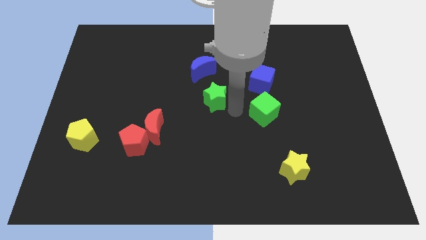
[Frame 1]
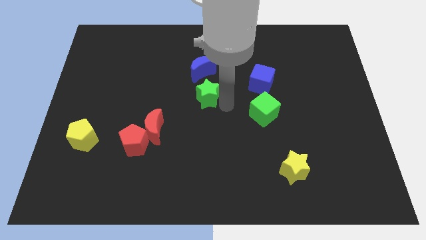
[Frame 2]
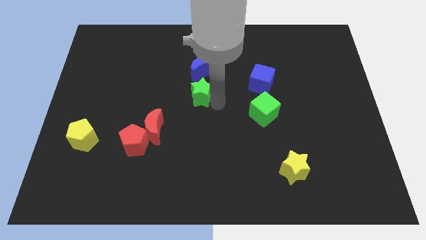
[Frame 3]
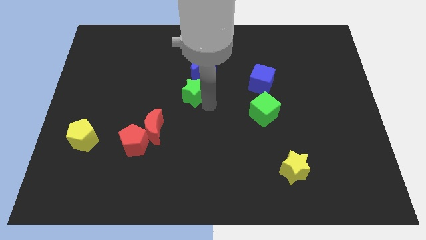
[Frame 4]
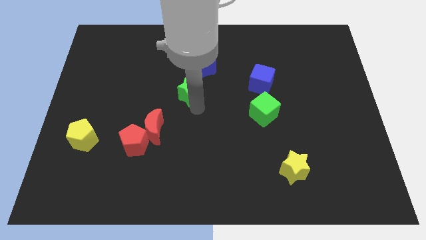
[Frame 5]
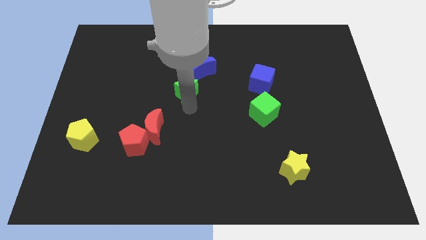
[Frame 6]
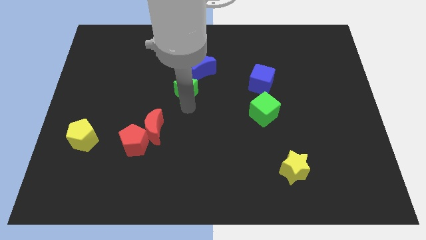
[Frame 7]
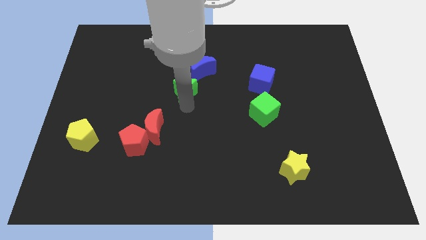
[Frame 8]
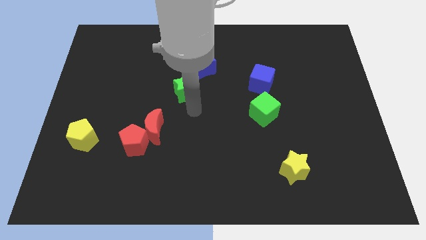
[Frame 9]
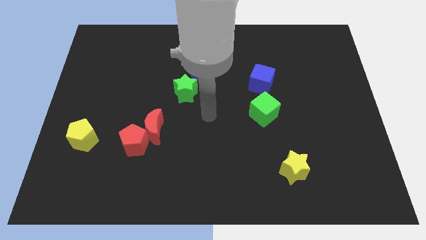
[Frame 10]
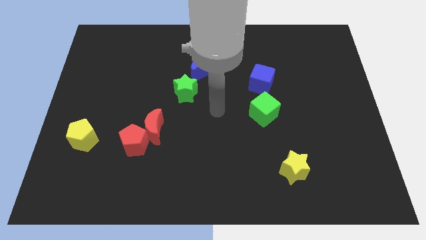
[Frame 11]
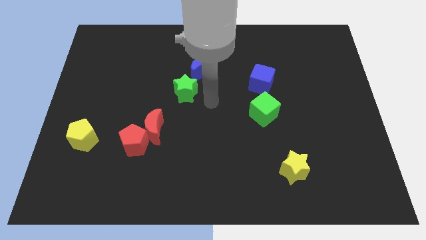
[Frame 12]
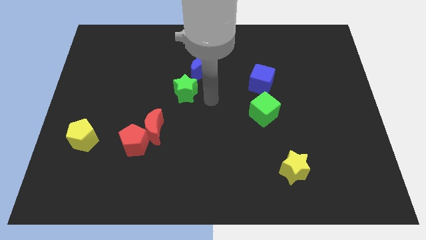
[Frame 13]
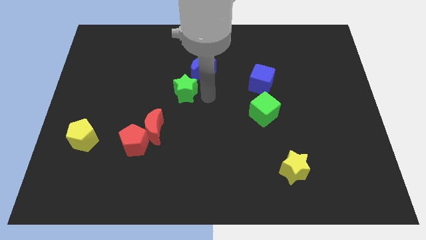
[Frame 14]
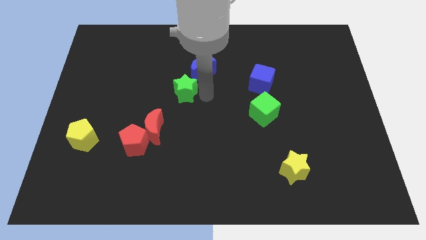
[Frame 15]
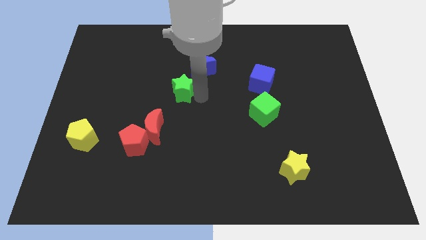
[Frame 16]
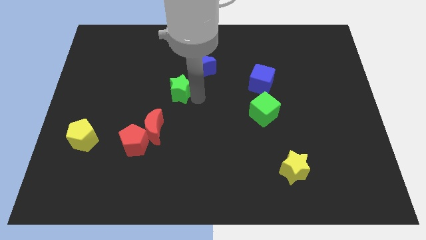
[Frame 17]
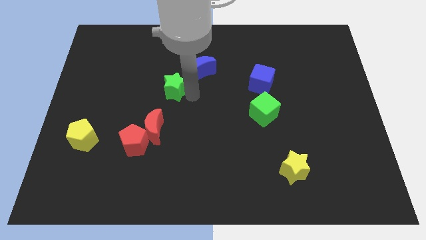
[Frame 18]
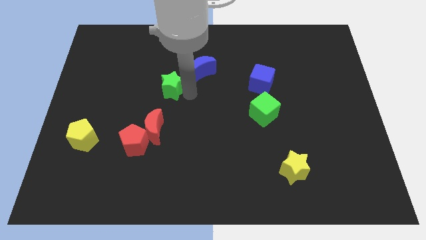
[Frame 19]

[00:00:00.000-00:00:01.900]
place the green star to the left of blue crescent

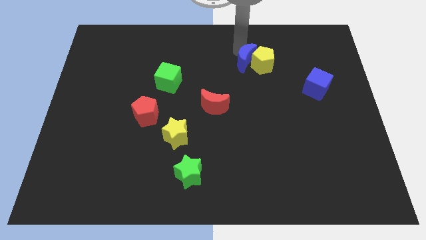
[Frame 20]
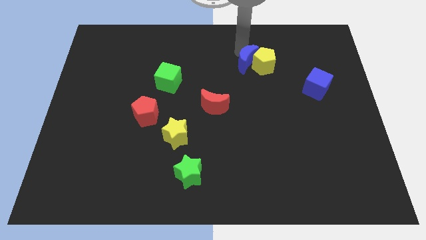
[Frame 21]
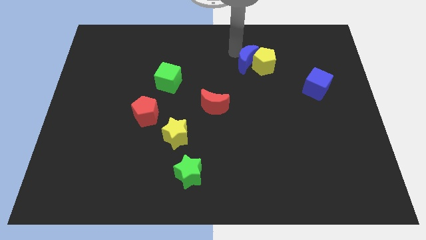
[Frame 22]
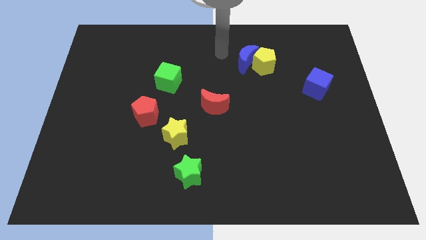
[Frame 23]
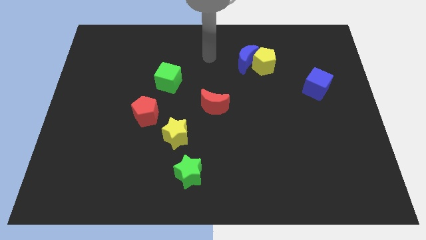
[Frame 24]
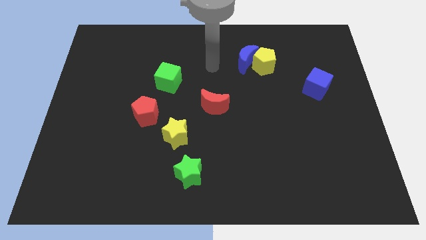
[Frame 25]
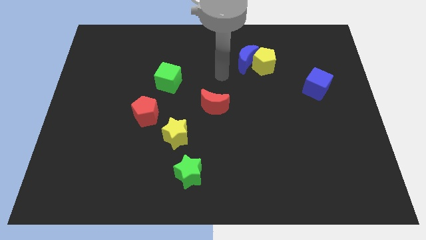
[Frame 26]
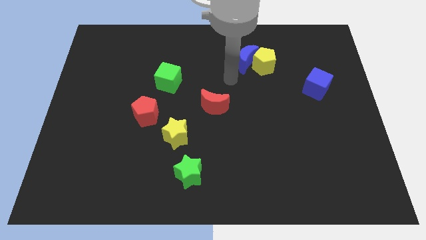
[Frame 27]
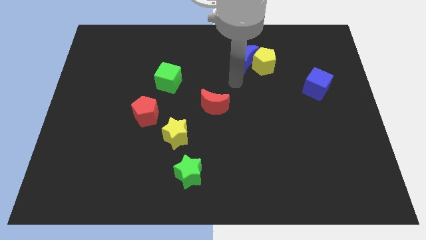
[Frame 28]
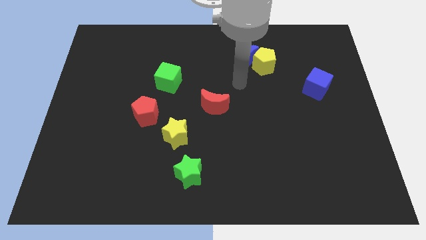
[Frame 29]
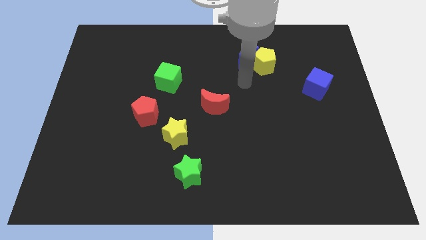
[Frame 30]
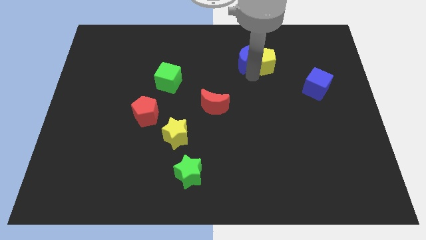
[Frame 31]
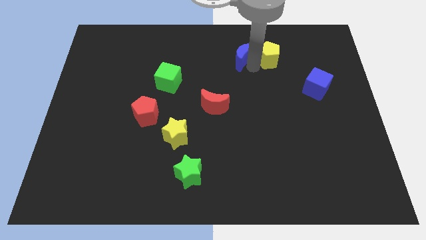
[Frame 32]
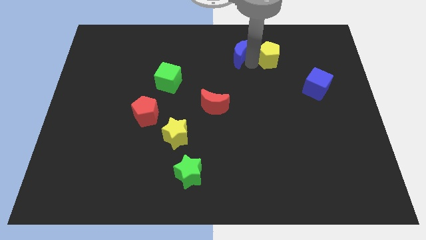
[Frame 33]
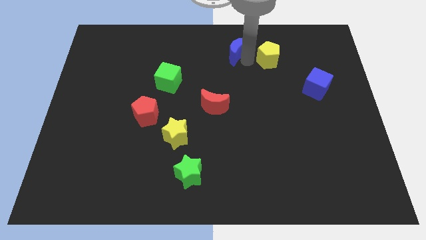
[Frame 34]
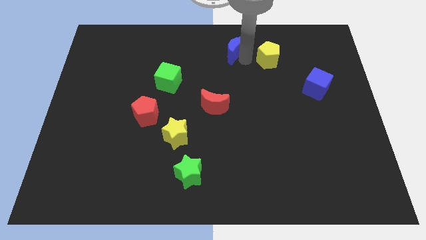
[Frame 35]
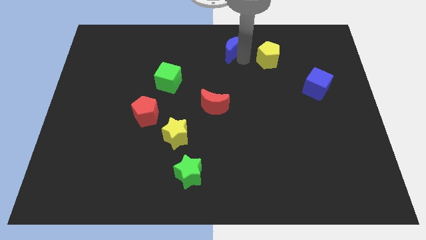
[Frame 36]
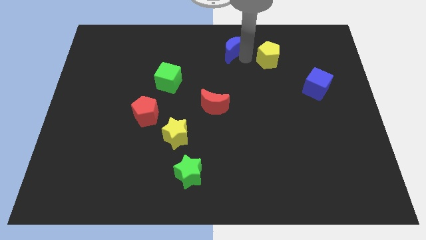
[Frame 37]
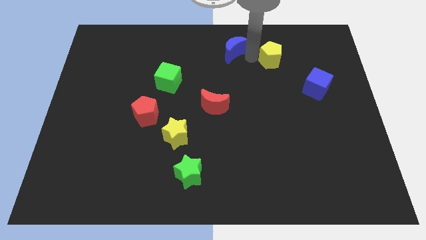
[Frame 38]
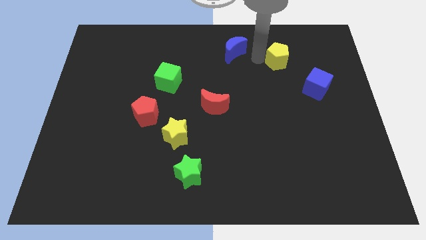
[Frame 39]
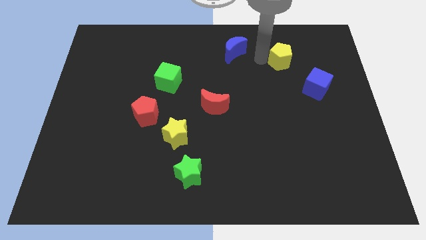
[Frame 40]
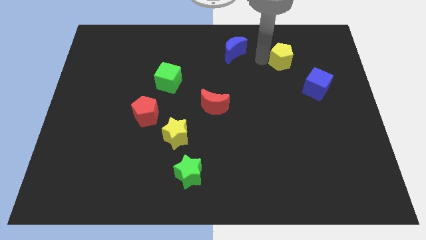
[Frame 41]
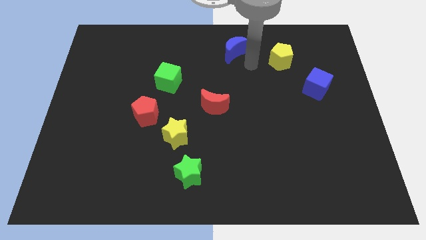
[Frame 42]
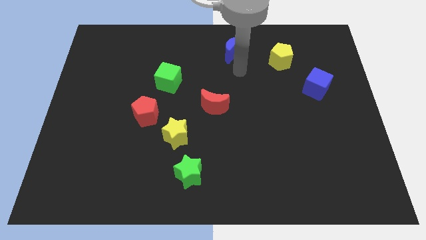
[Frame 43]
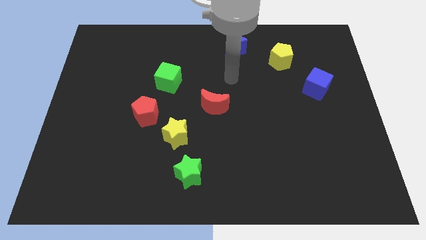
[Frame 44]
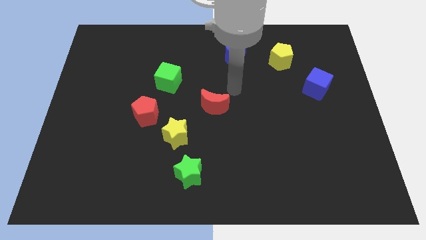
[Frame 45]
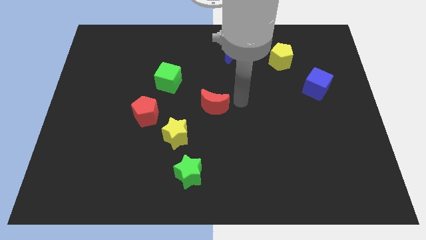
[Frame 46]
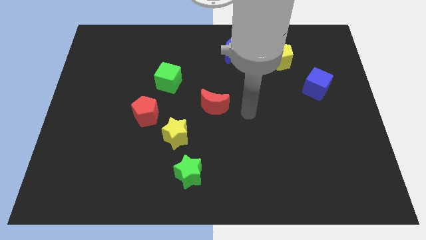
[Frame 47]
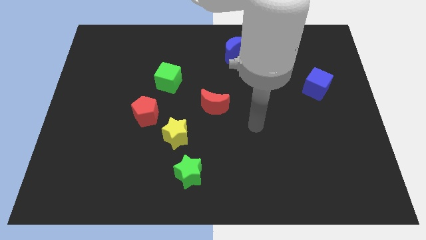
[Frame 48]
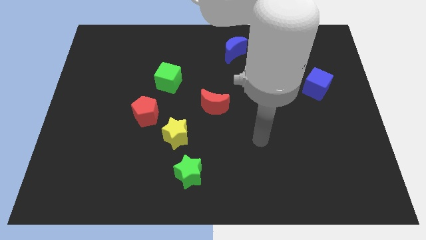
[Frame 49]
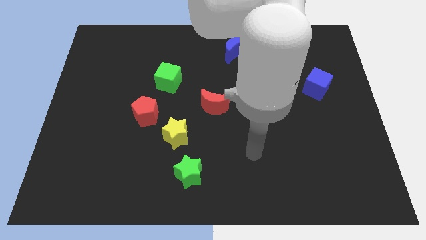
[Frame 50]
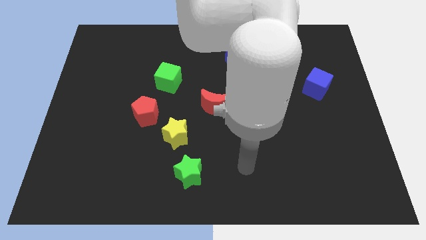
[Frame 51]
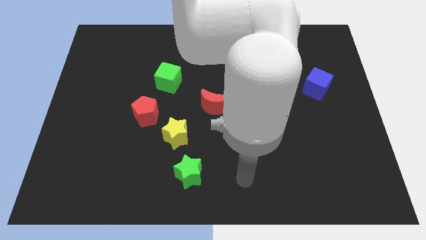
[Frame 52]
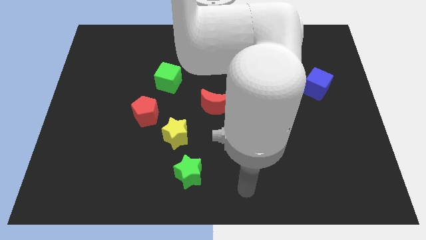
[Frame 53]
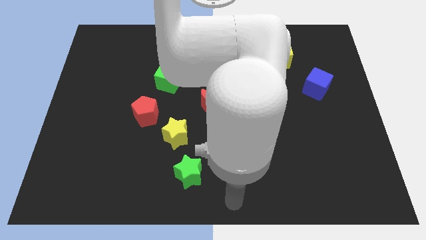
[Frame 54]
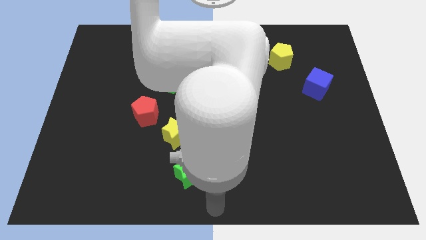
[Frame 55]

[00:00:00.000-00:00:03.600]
separate yellow pentagon from blue moon

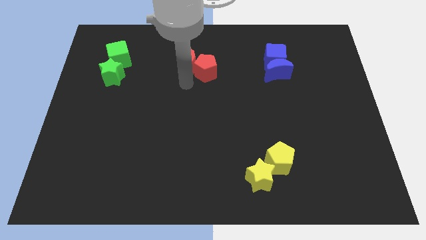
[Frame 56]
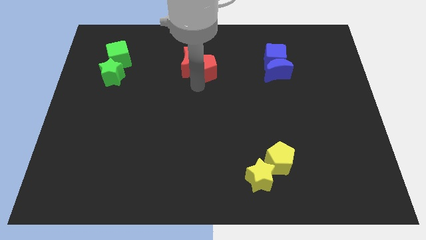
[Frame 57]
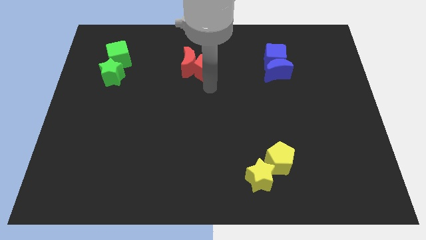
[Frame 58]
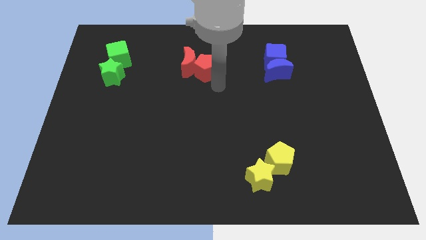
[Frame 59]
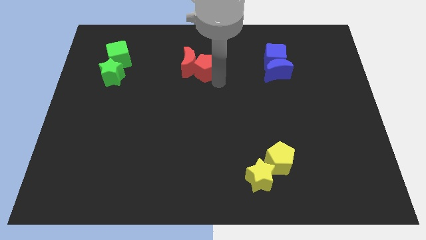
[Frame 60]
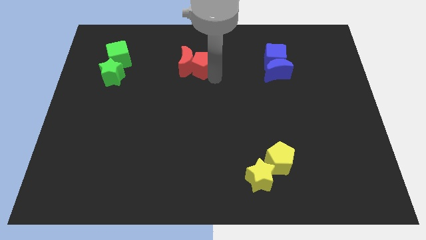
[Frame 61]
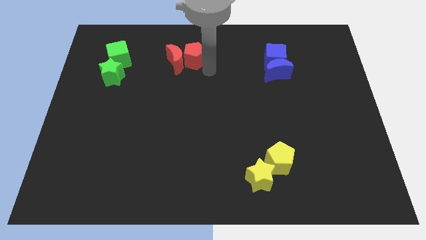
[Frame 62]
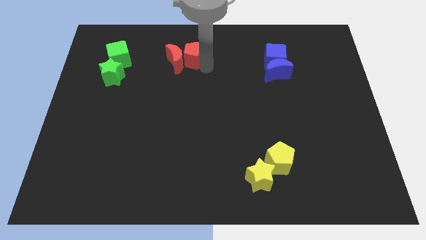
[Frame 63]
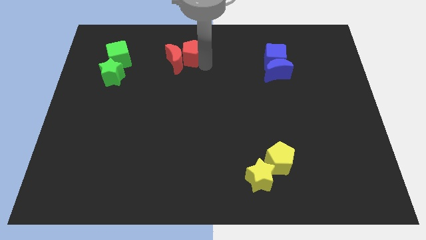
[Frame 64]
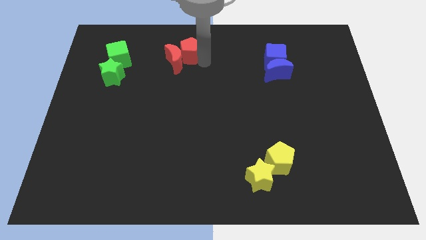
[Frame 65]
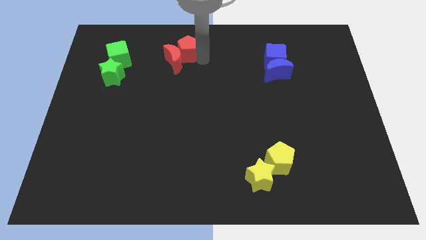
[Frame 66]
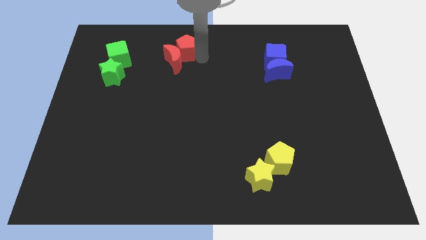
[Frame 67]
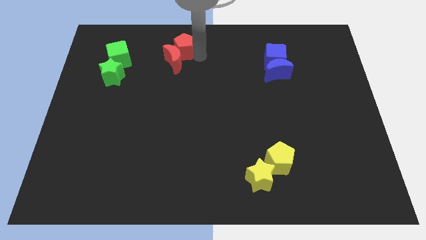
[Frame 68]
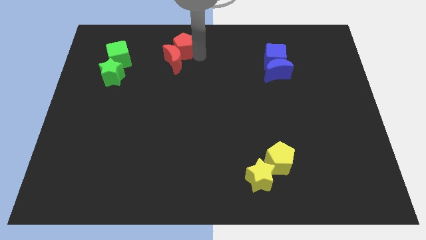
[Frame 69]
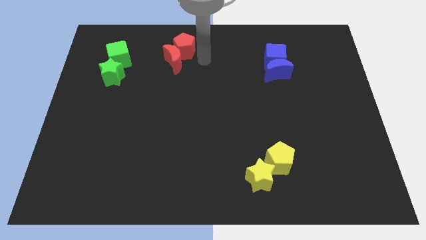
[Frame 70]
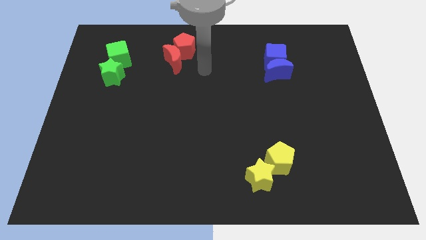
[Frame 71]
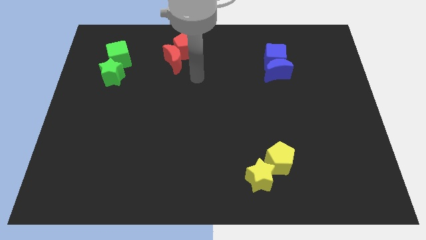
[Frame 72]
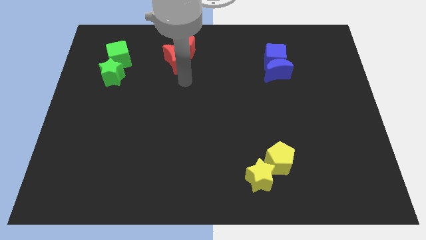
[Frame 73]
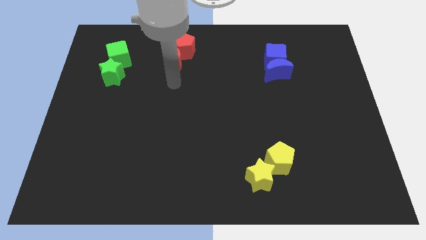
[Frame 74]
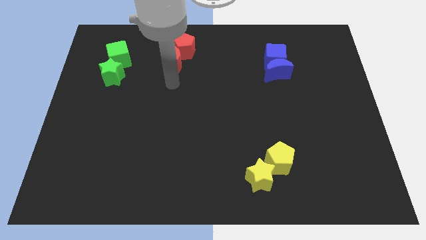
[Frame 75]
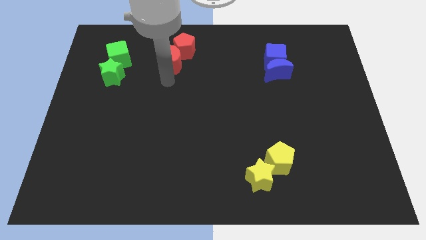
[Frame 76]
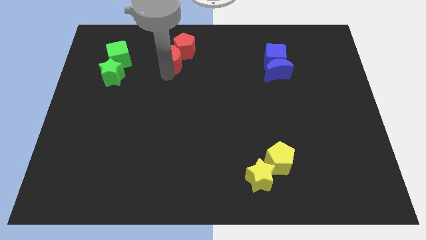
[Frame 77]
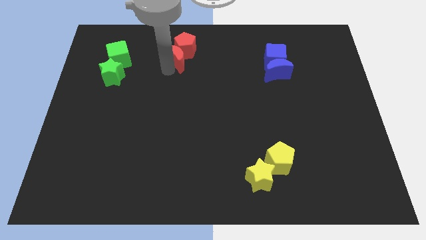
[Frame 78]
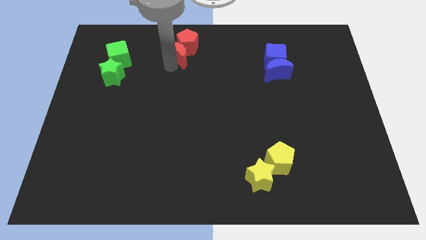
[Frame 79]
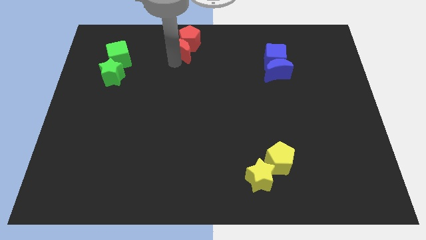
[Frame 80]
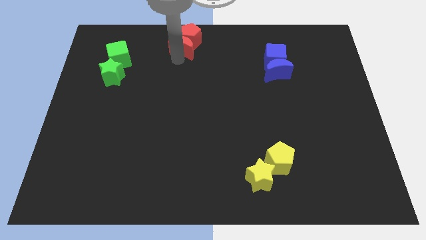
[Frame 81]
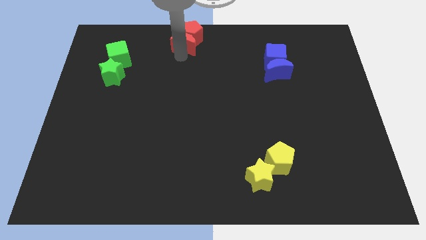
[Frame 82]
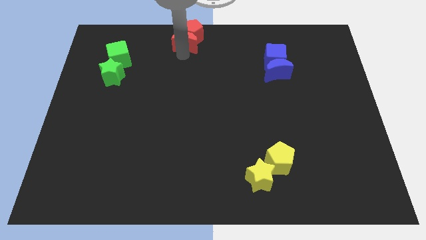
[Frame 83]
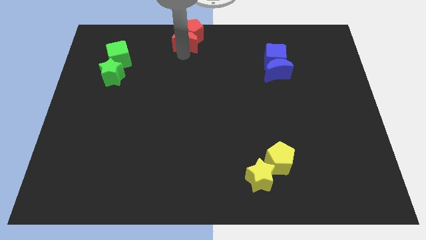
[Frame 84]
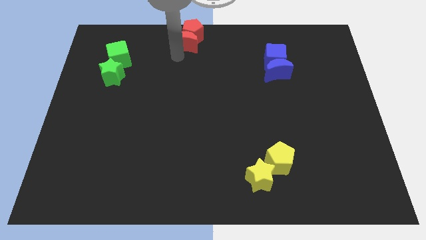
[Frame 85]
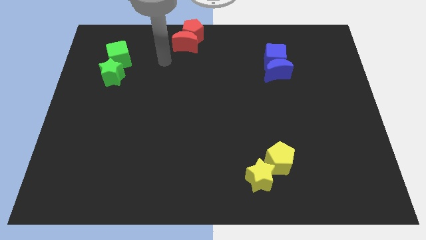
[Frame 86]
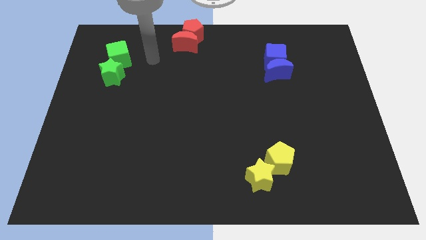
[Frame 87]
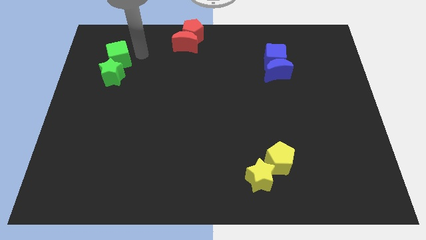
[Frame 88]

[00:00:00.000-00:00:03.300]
push the red crescent and red pentagon to the top center

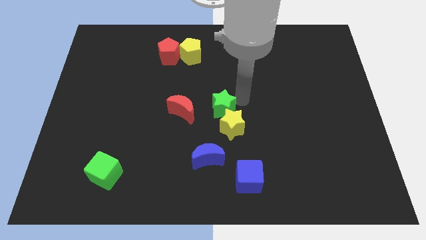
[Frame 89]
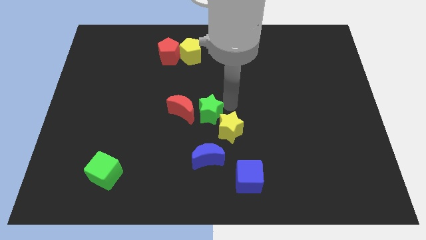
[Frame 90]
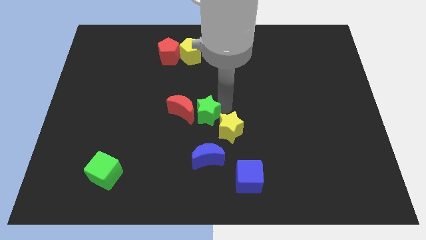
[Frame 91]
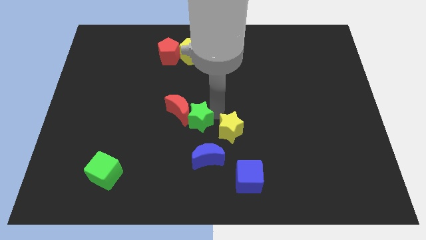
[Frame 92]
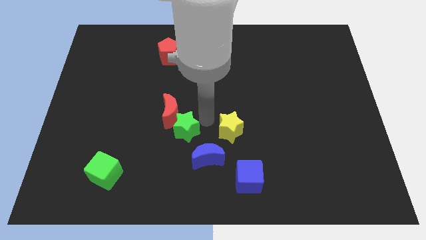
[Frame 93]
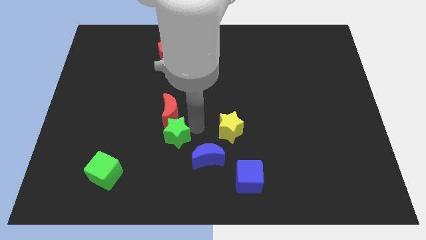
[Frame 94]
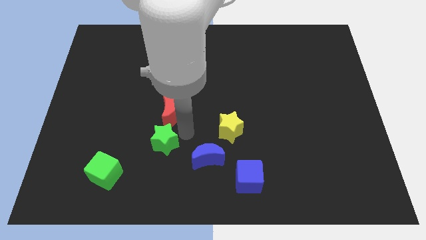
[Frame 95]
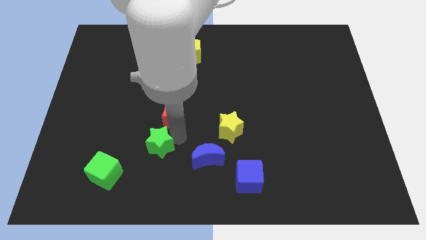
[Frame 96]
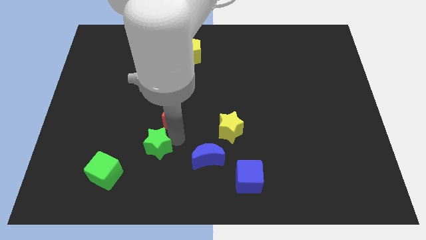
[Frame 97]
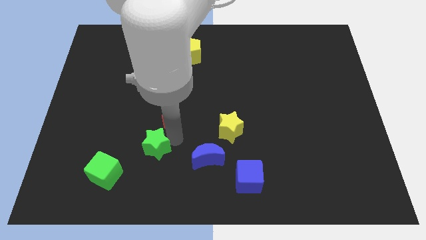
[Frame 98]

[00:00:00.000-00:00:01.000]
place the green star diagonal to the green cube
